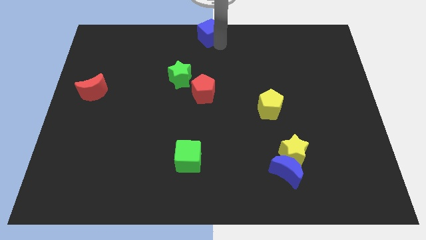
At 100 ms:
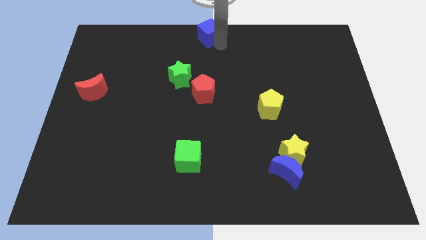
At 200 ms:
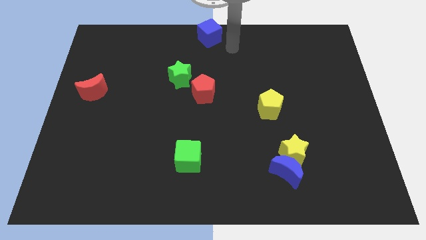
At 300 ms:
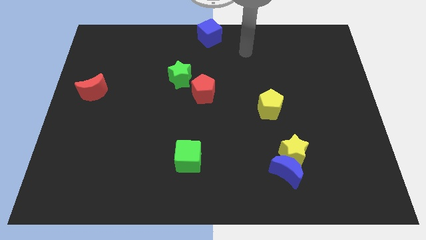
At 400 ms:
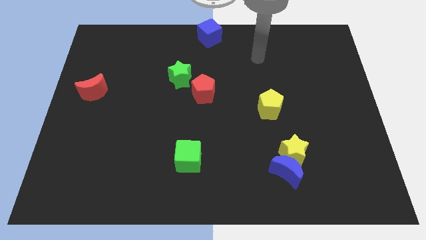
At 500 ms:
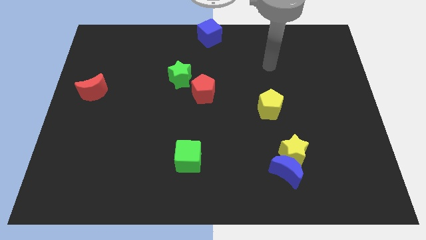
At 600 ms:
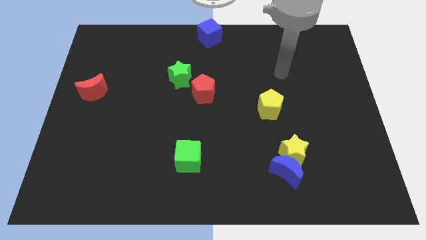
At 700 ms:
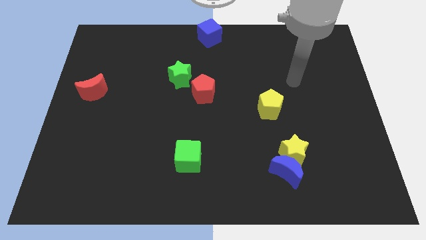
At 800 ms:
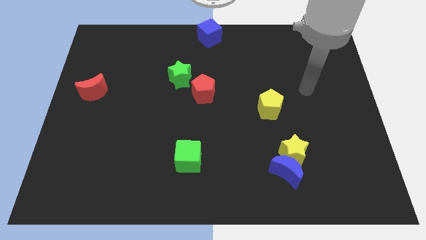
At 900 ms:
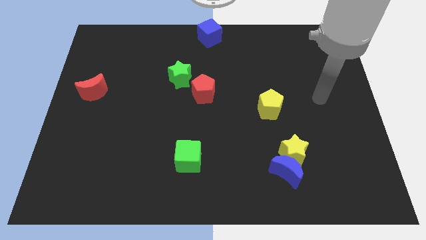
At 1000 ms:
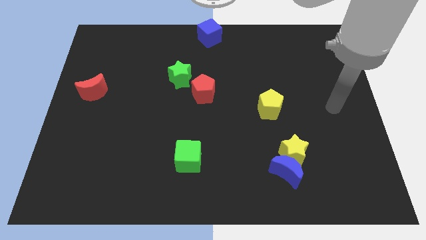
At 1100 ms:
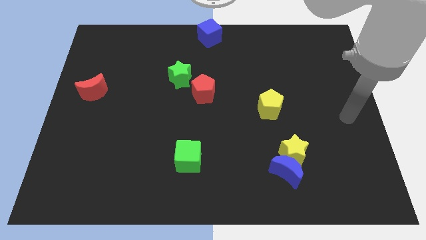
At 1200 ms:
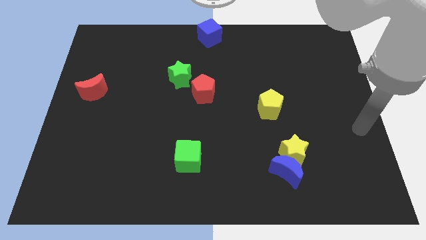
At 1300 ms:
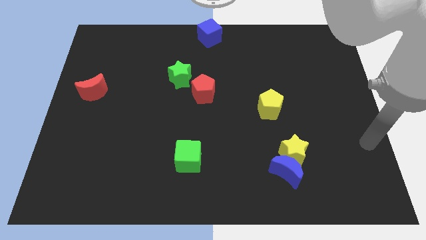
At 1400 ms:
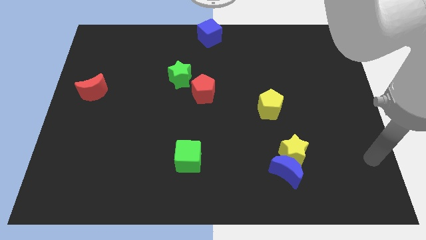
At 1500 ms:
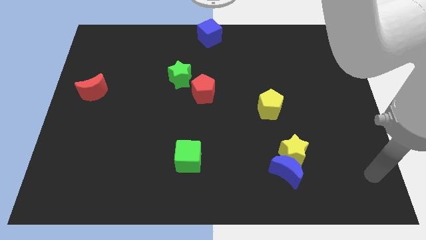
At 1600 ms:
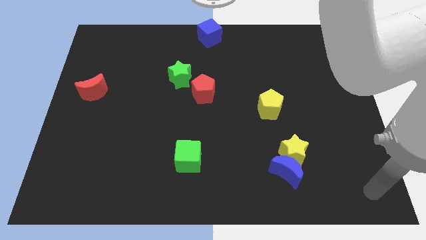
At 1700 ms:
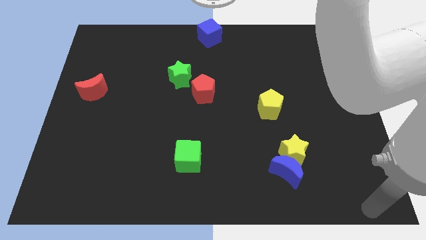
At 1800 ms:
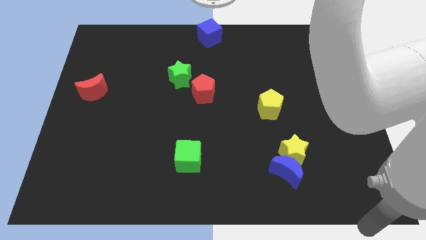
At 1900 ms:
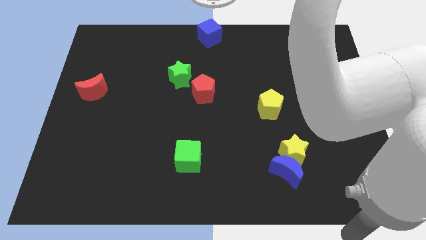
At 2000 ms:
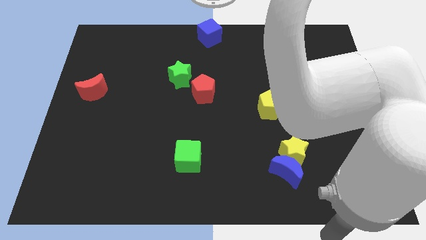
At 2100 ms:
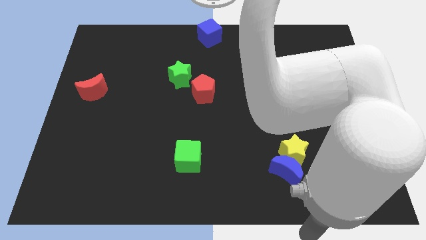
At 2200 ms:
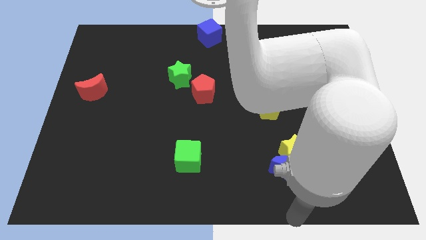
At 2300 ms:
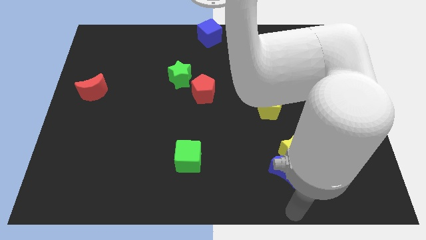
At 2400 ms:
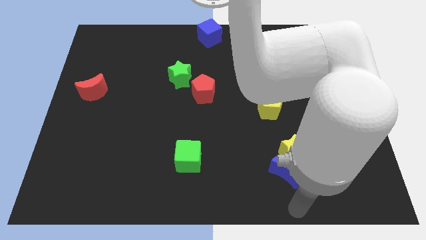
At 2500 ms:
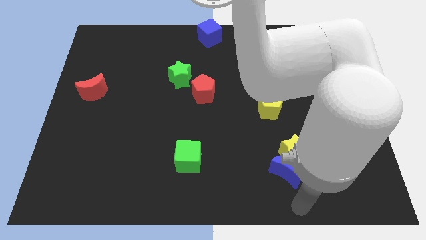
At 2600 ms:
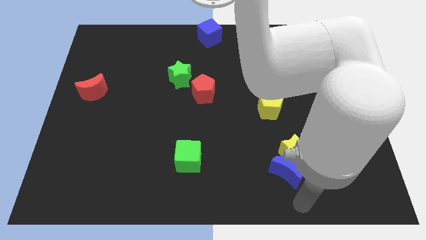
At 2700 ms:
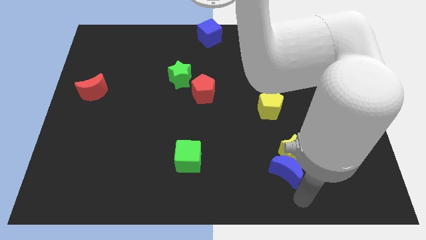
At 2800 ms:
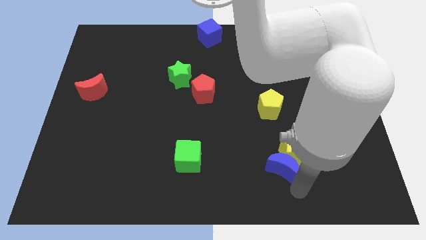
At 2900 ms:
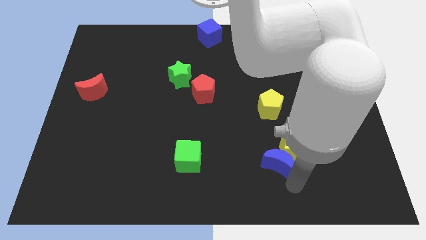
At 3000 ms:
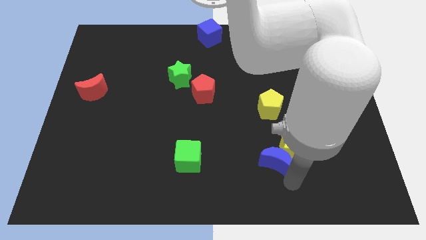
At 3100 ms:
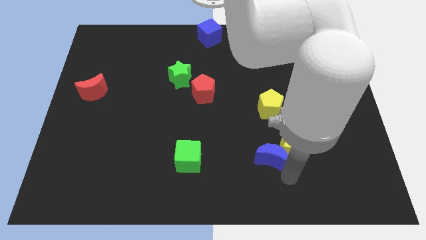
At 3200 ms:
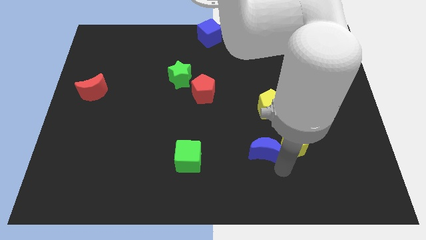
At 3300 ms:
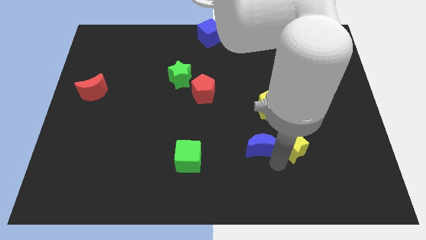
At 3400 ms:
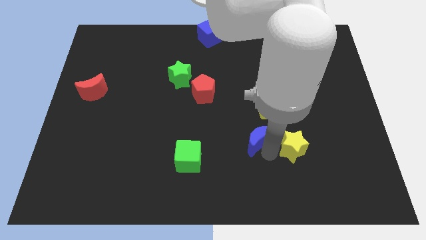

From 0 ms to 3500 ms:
push the blue crescent to the left of the yellow star

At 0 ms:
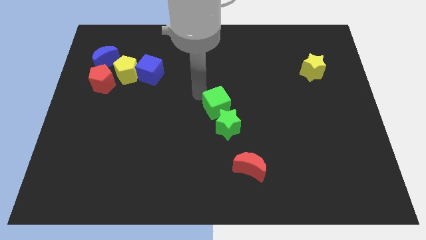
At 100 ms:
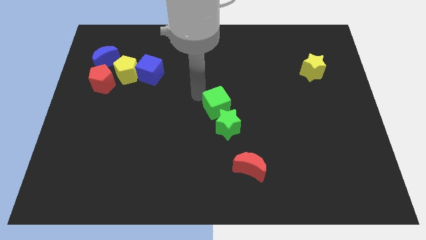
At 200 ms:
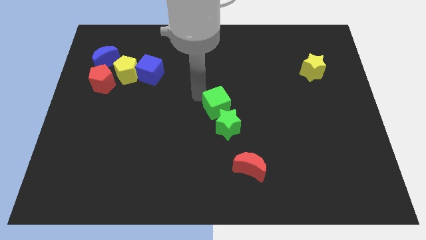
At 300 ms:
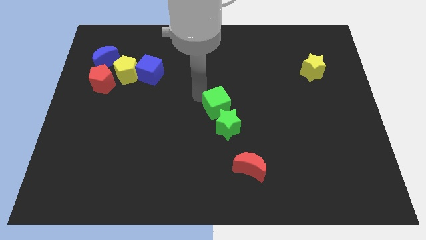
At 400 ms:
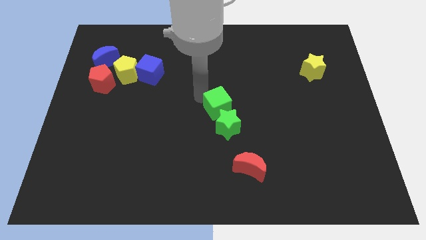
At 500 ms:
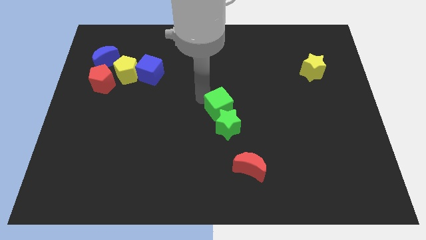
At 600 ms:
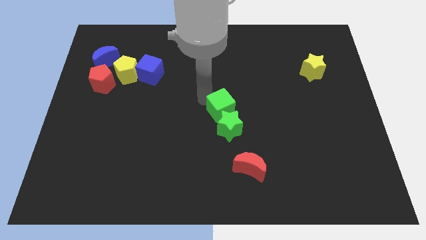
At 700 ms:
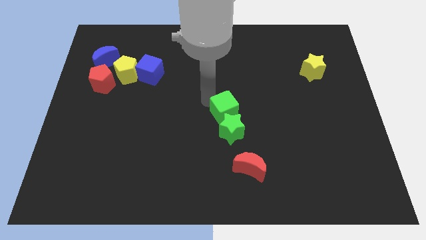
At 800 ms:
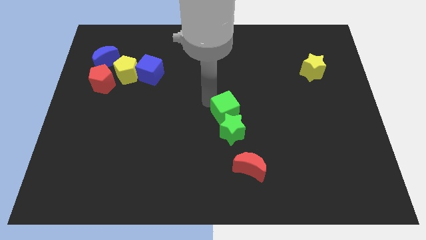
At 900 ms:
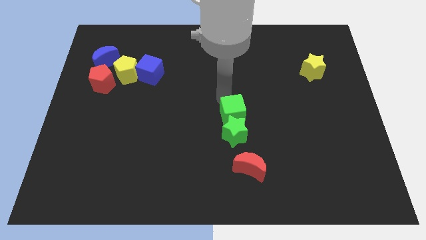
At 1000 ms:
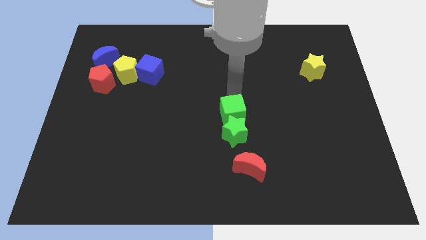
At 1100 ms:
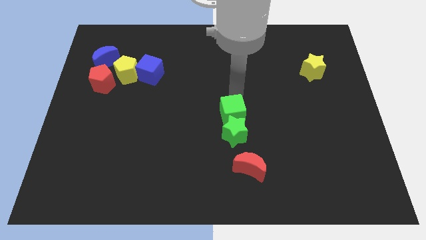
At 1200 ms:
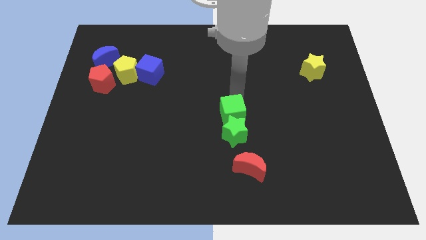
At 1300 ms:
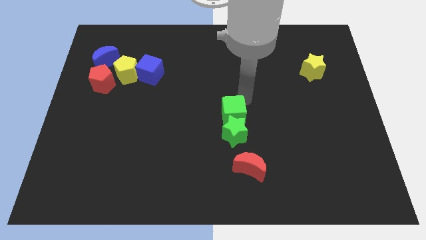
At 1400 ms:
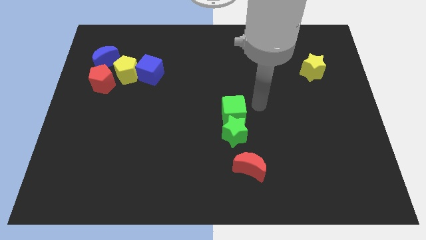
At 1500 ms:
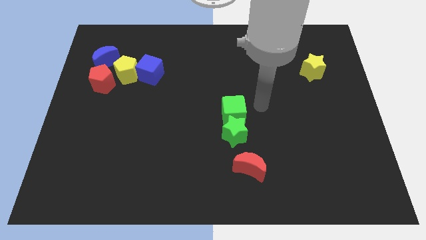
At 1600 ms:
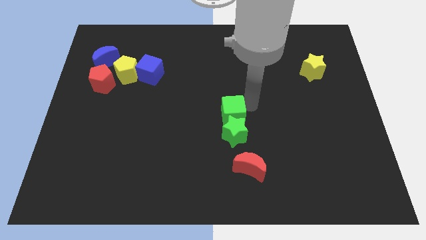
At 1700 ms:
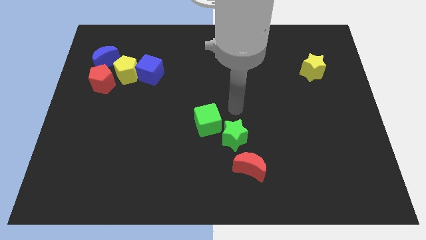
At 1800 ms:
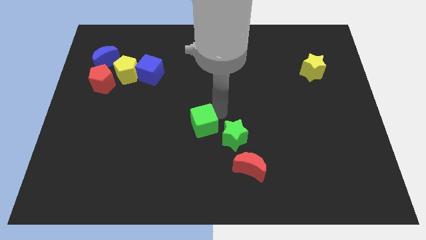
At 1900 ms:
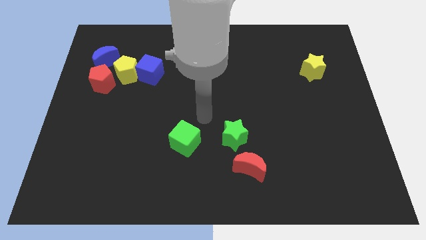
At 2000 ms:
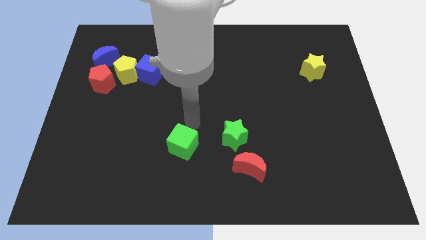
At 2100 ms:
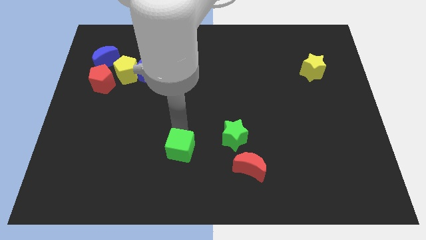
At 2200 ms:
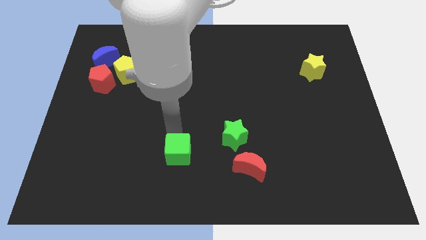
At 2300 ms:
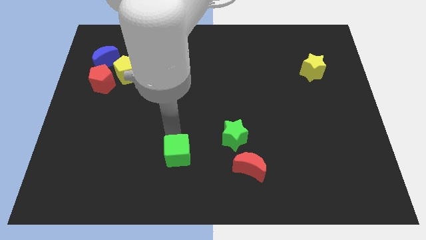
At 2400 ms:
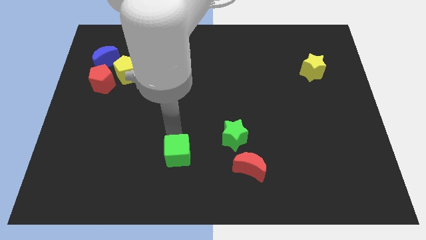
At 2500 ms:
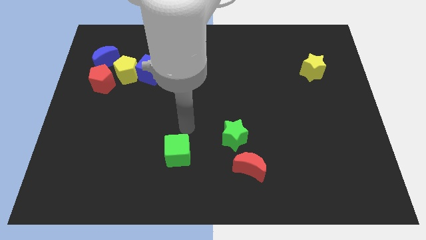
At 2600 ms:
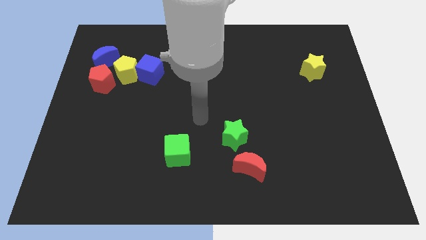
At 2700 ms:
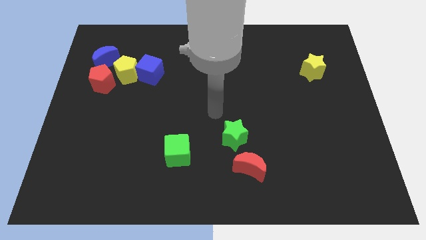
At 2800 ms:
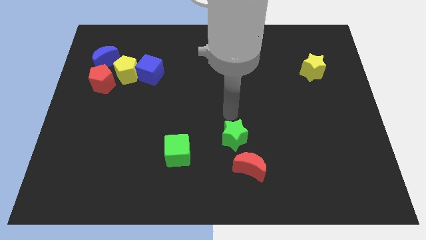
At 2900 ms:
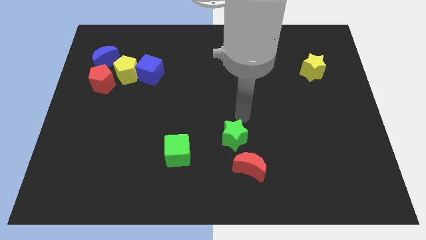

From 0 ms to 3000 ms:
separate green cube from the green star

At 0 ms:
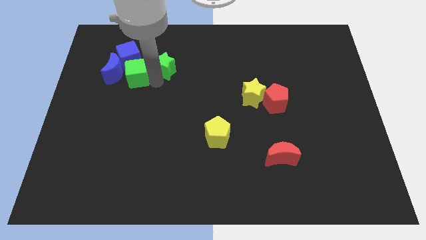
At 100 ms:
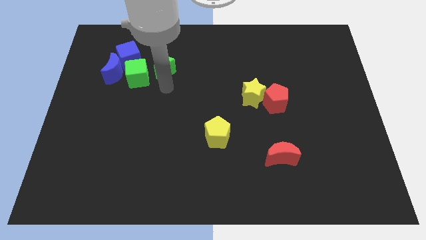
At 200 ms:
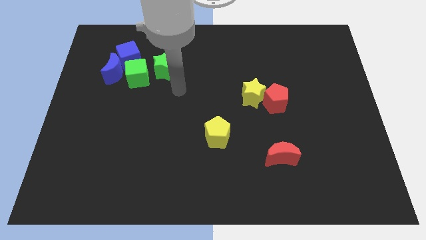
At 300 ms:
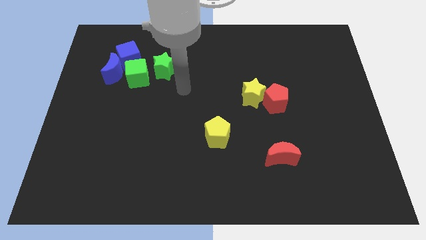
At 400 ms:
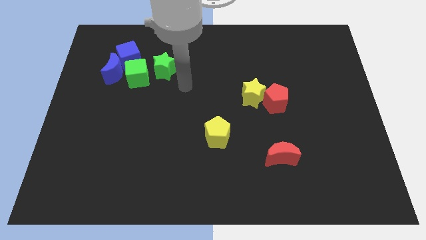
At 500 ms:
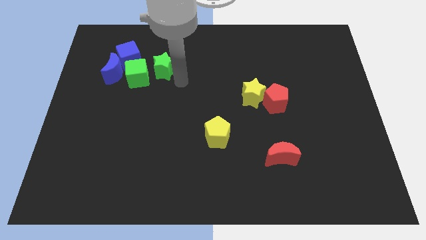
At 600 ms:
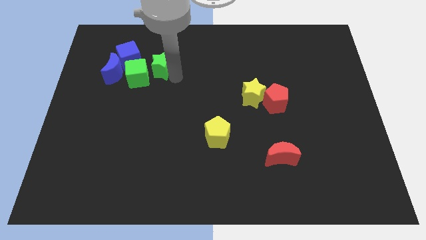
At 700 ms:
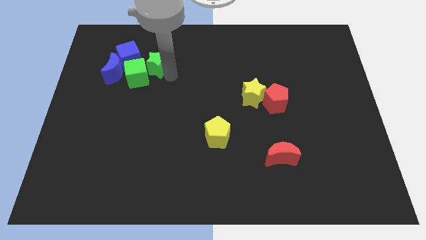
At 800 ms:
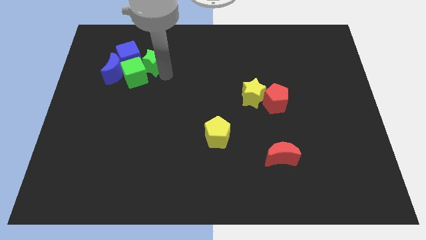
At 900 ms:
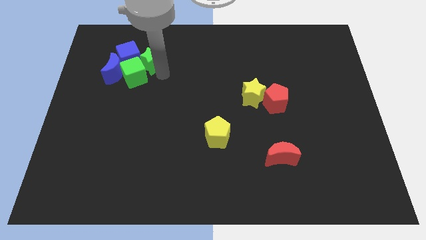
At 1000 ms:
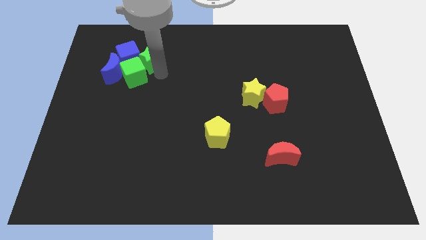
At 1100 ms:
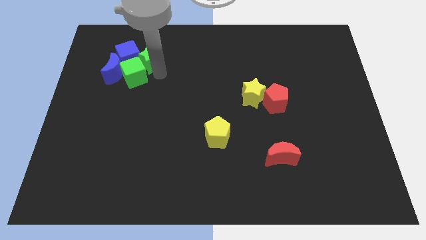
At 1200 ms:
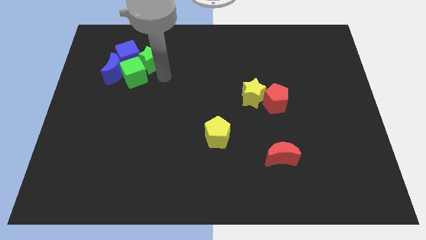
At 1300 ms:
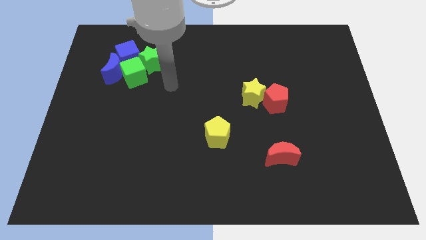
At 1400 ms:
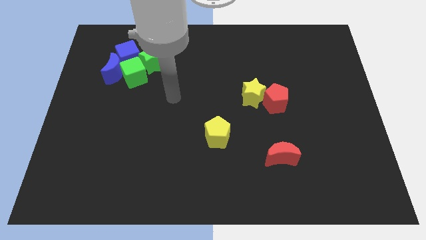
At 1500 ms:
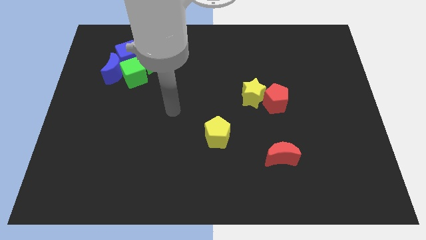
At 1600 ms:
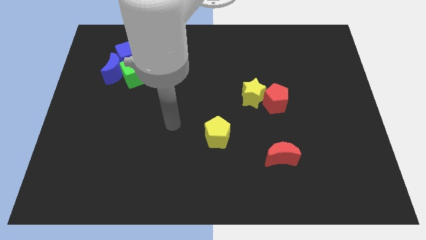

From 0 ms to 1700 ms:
push the green star toward the blue cube

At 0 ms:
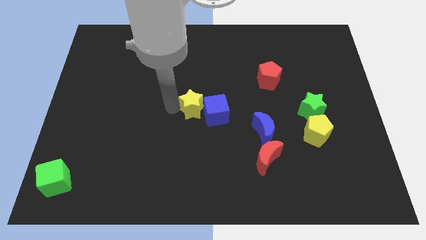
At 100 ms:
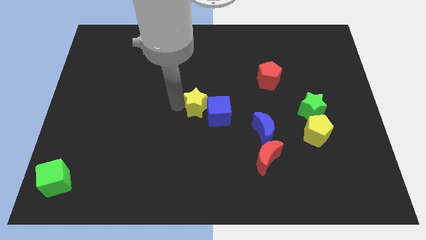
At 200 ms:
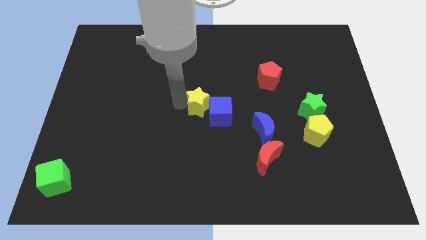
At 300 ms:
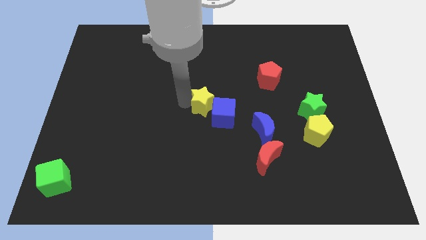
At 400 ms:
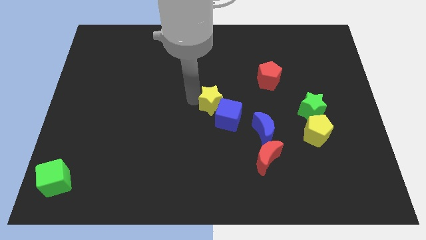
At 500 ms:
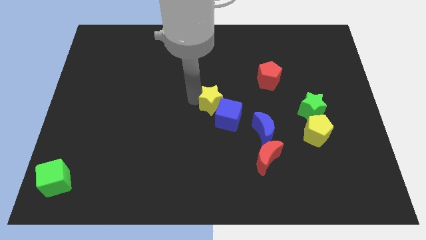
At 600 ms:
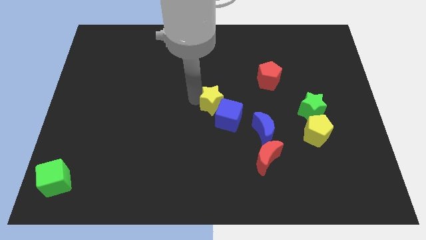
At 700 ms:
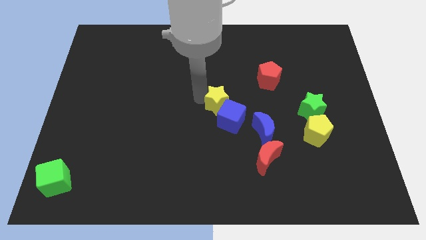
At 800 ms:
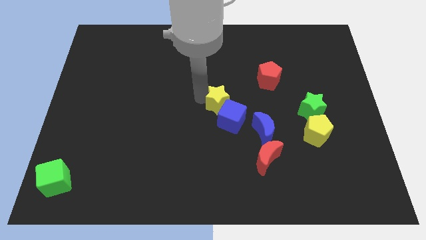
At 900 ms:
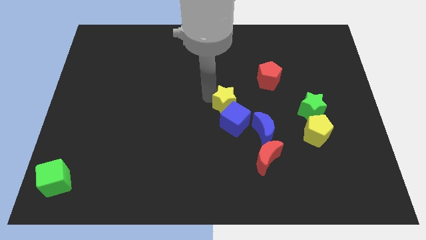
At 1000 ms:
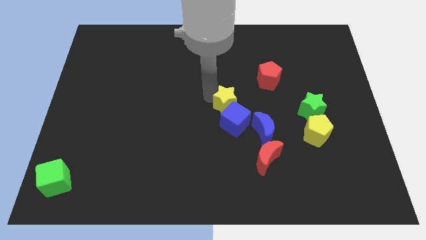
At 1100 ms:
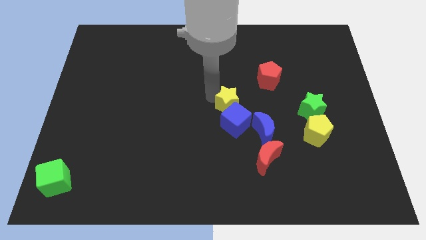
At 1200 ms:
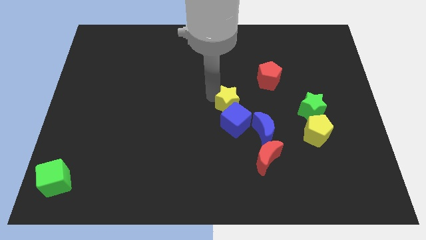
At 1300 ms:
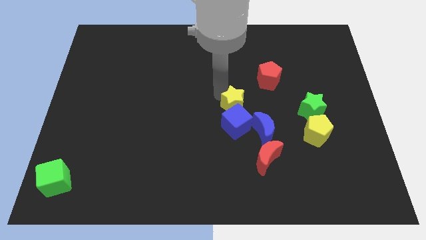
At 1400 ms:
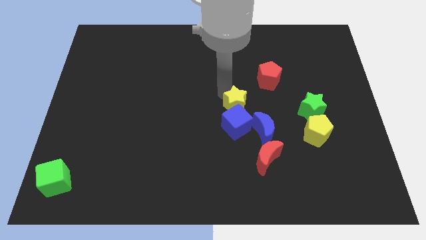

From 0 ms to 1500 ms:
place yellow star to the top of blue cube
